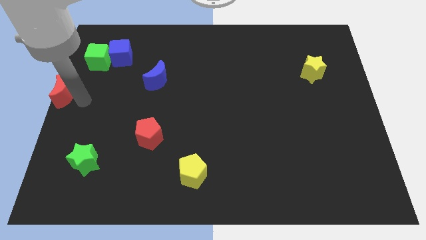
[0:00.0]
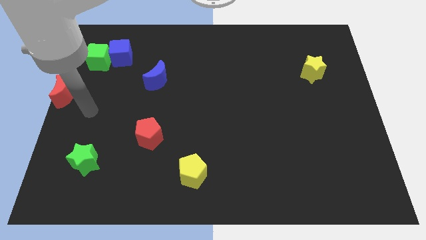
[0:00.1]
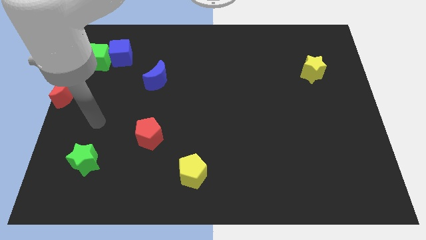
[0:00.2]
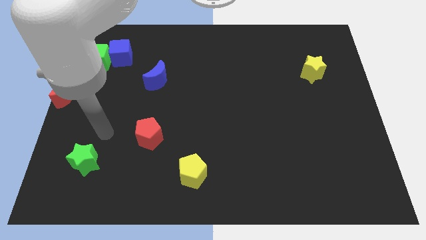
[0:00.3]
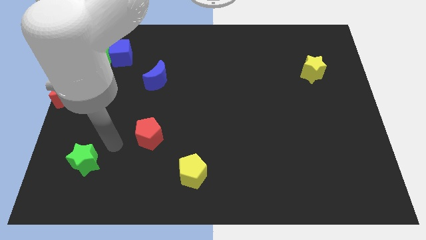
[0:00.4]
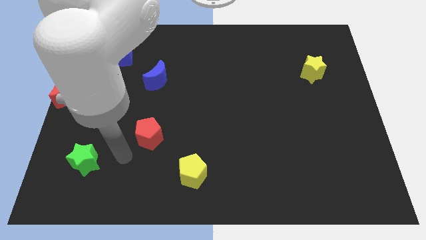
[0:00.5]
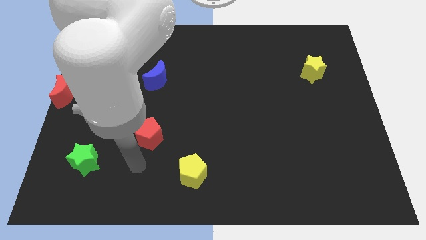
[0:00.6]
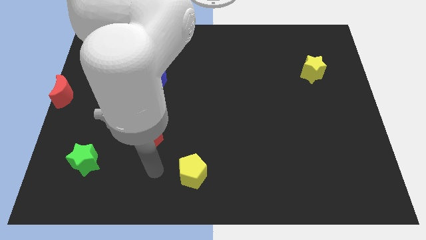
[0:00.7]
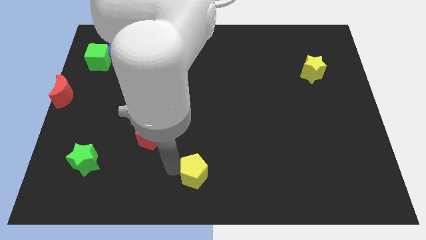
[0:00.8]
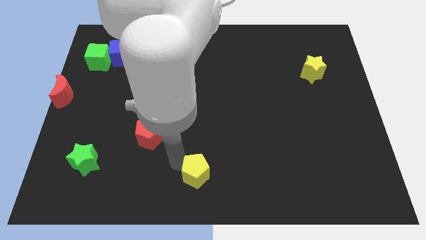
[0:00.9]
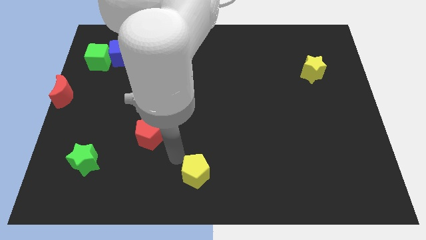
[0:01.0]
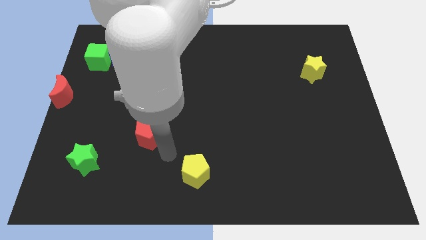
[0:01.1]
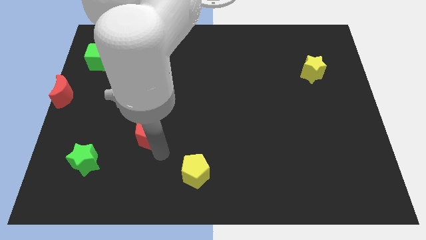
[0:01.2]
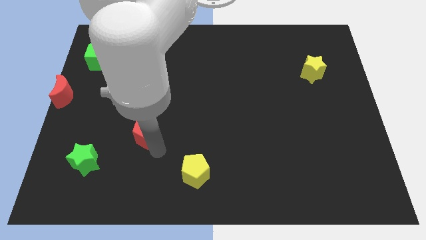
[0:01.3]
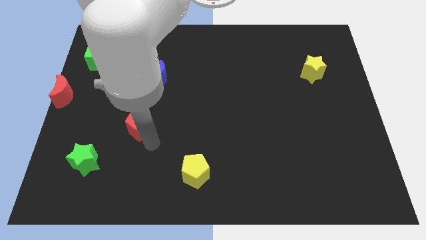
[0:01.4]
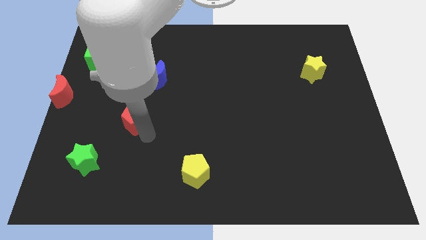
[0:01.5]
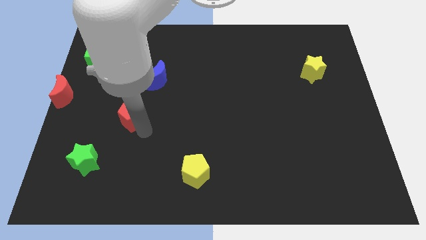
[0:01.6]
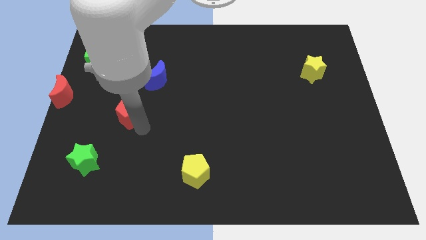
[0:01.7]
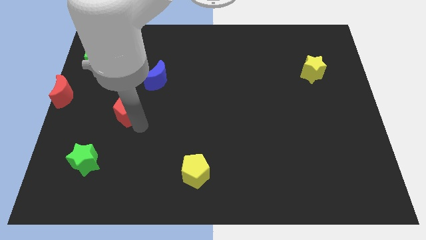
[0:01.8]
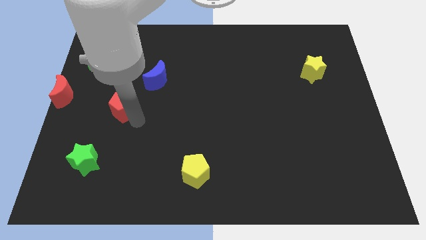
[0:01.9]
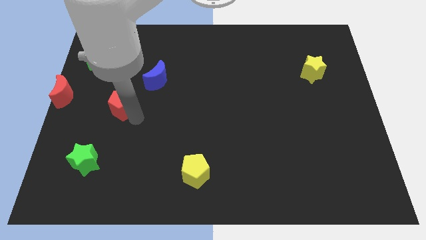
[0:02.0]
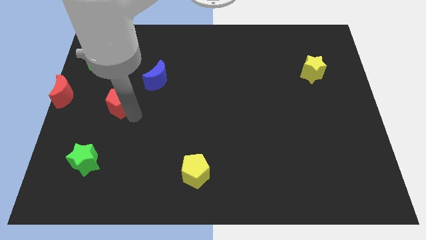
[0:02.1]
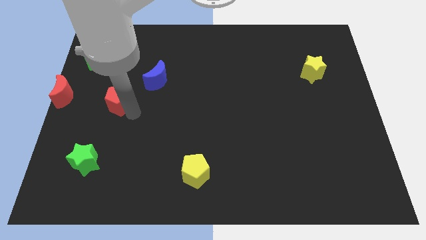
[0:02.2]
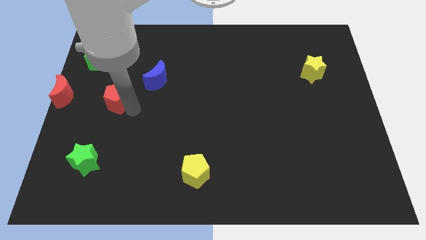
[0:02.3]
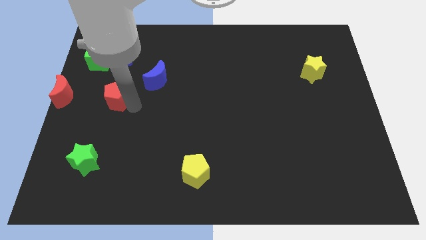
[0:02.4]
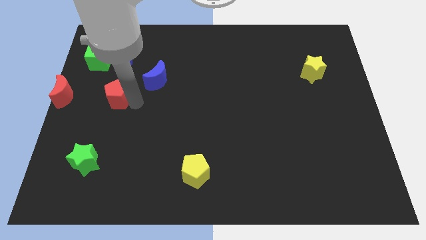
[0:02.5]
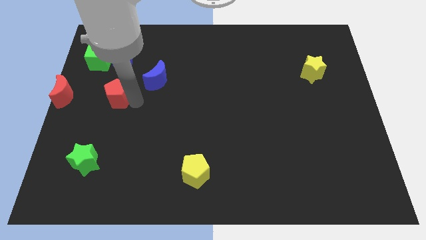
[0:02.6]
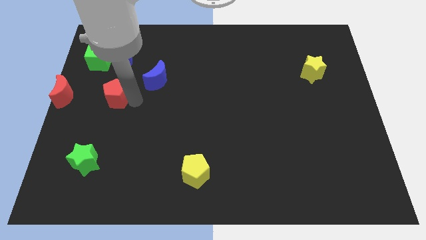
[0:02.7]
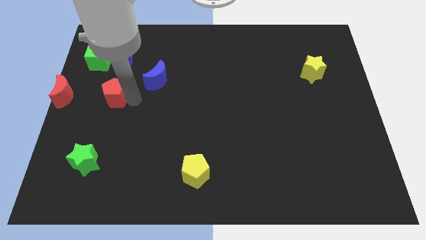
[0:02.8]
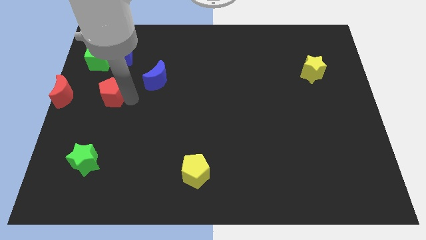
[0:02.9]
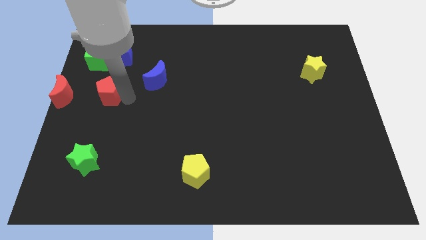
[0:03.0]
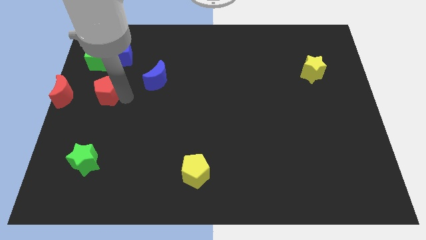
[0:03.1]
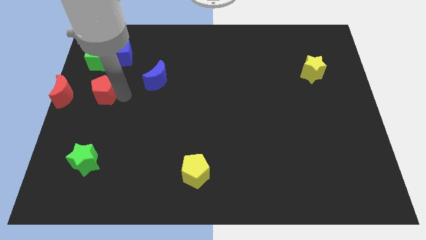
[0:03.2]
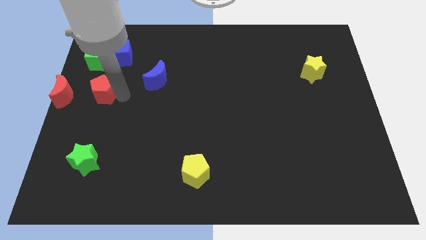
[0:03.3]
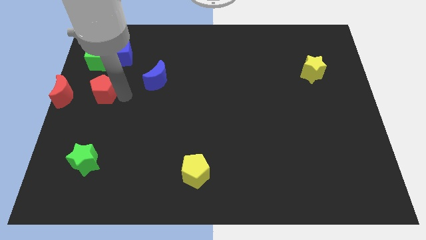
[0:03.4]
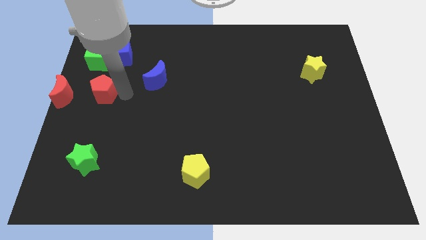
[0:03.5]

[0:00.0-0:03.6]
move away from the red moon

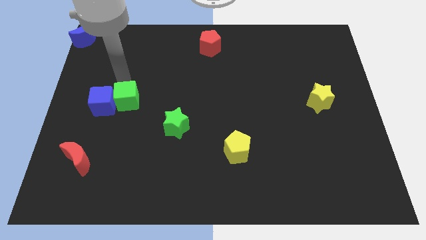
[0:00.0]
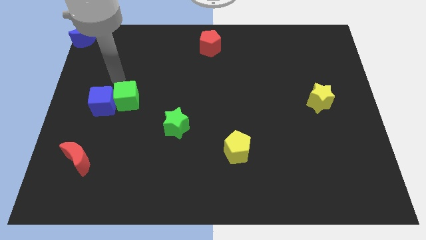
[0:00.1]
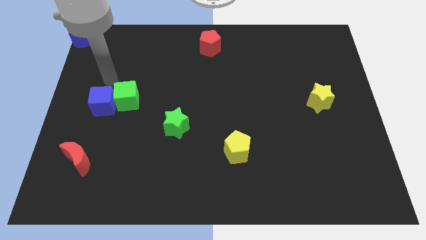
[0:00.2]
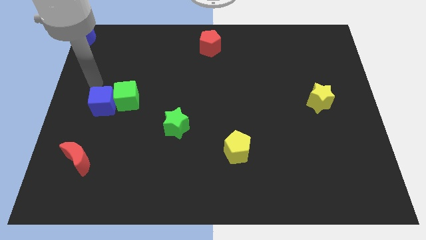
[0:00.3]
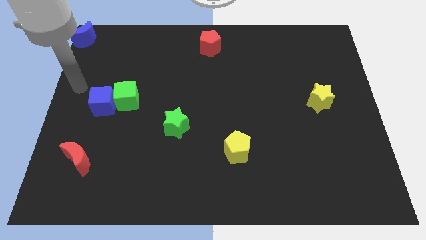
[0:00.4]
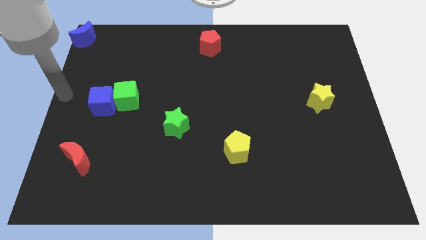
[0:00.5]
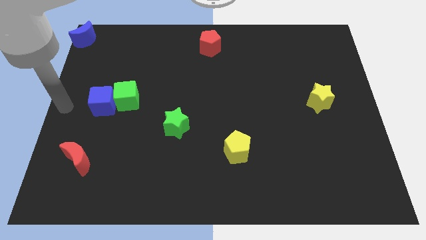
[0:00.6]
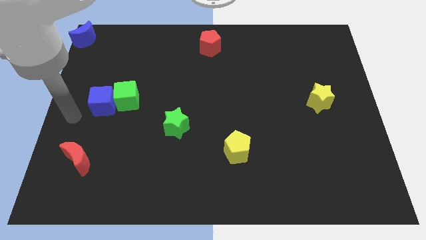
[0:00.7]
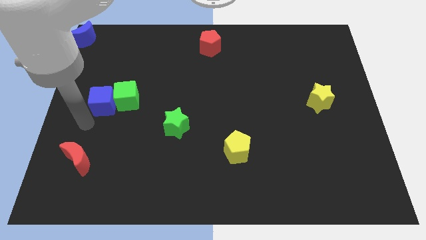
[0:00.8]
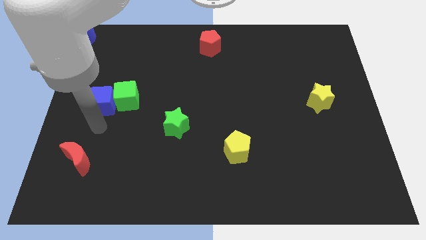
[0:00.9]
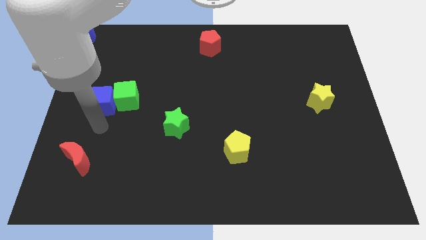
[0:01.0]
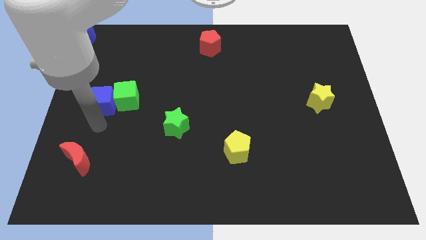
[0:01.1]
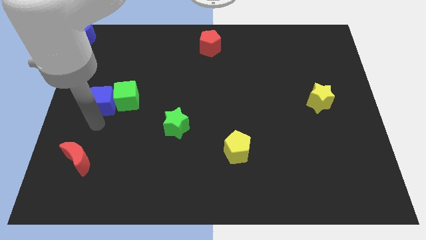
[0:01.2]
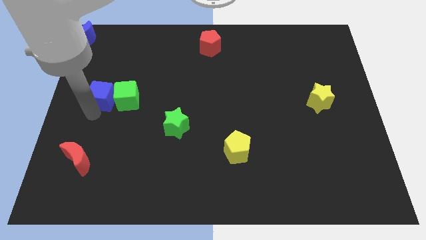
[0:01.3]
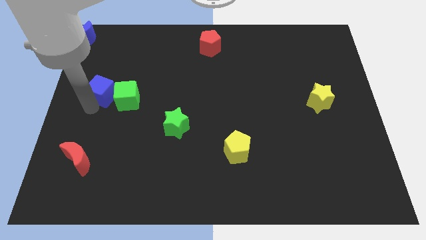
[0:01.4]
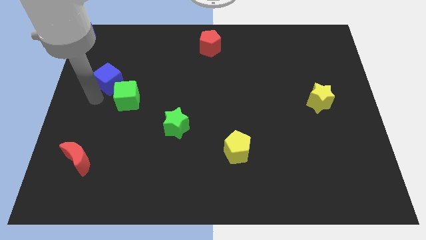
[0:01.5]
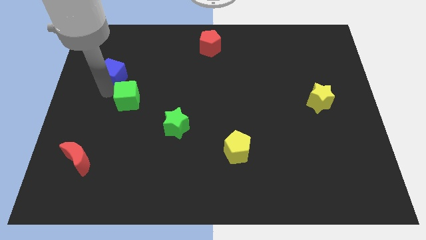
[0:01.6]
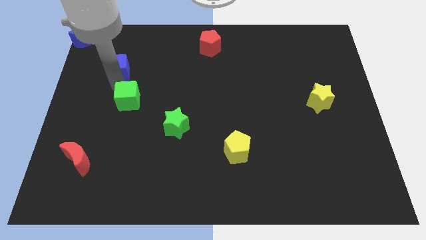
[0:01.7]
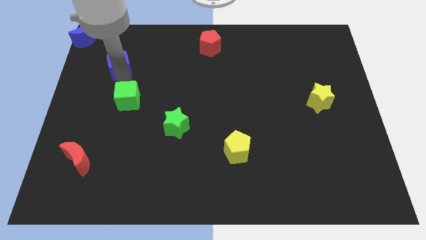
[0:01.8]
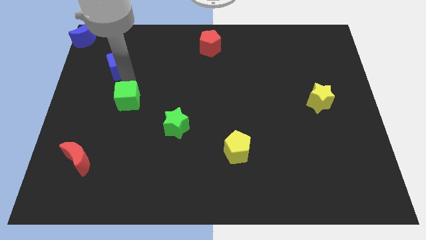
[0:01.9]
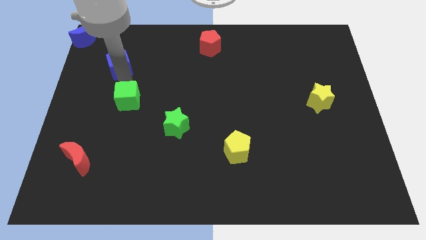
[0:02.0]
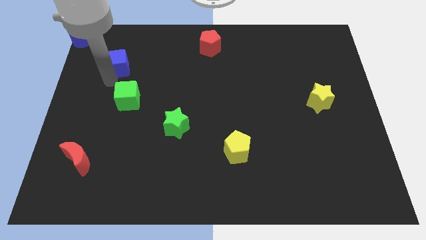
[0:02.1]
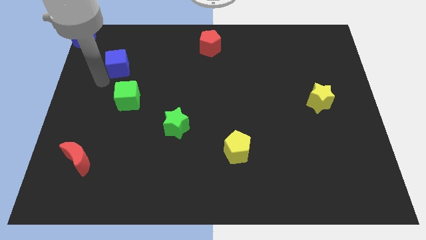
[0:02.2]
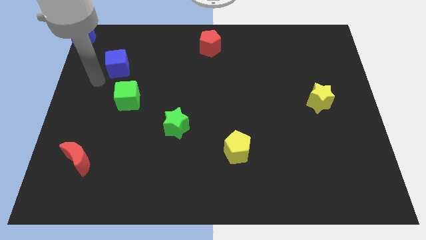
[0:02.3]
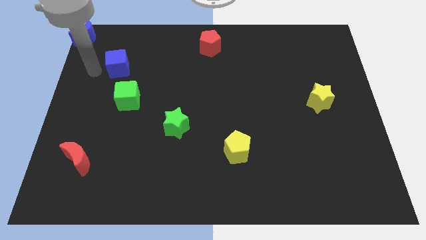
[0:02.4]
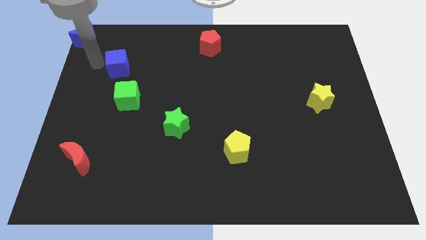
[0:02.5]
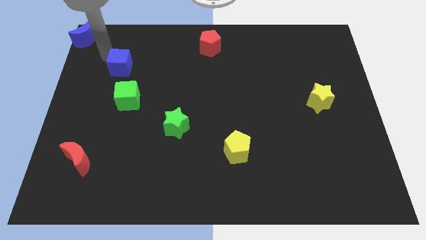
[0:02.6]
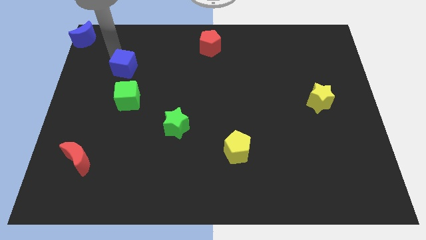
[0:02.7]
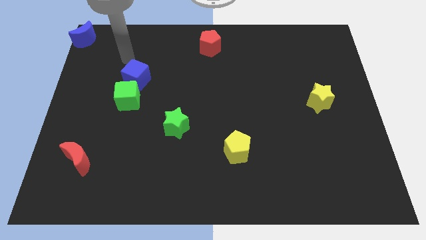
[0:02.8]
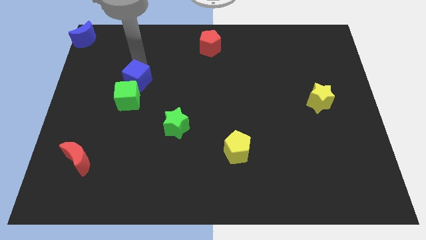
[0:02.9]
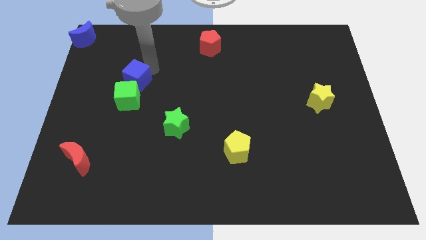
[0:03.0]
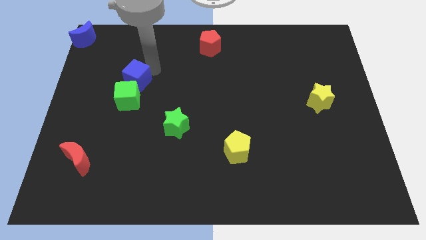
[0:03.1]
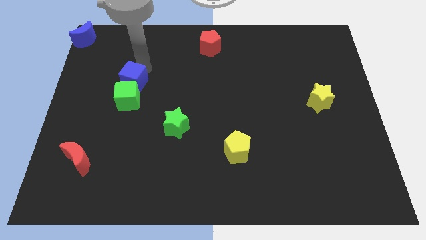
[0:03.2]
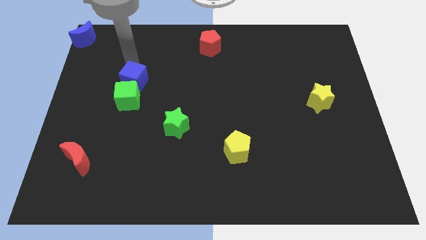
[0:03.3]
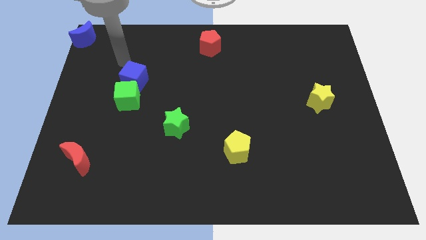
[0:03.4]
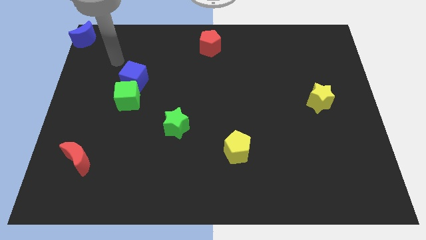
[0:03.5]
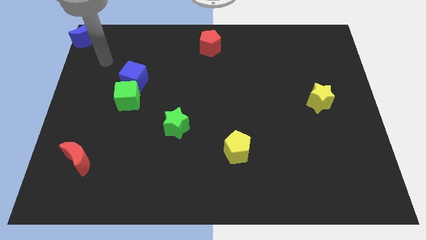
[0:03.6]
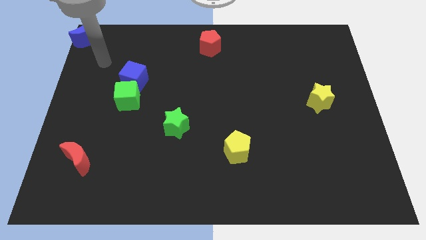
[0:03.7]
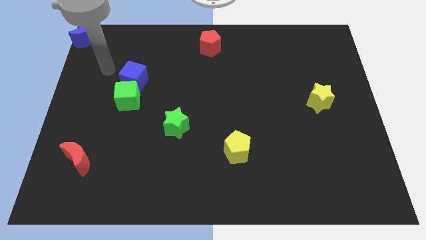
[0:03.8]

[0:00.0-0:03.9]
move the blue cube above the green cube

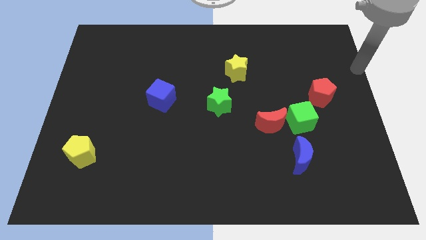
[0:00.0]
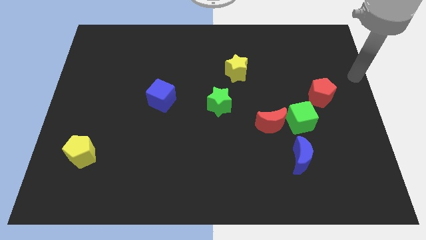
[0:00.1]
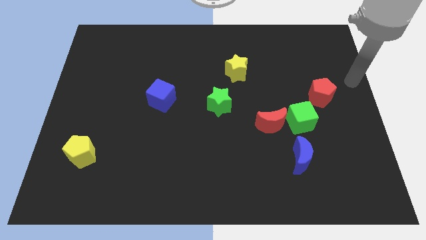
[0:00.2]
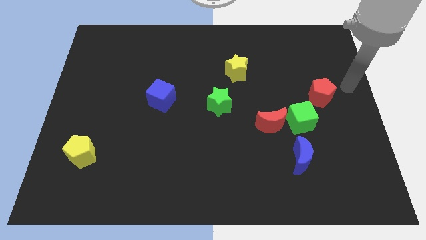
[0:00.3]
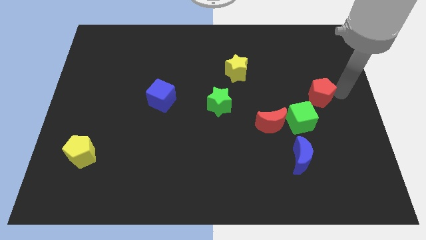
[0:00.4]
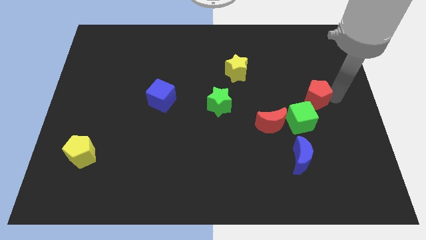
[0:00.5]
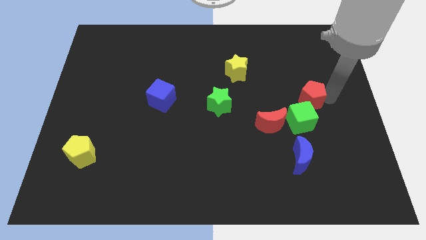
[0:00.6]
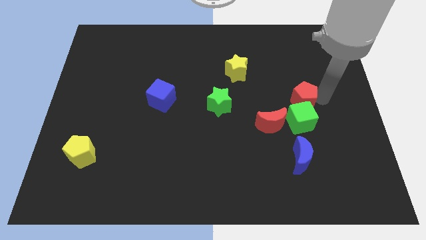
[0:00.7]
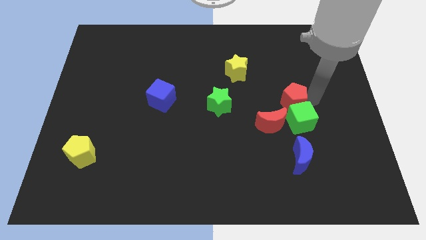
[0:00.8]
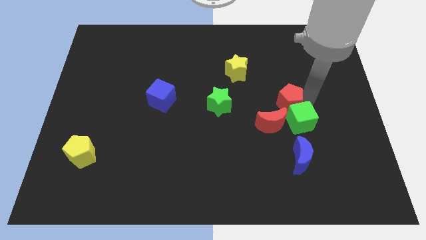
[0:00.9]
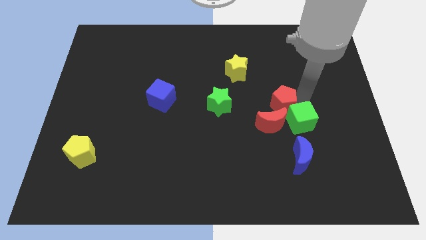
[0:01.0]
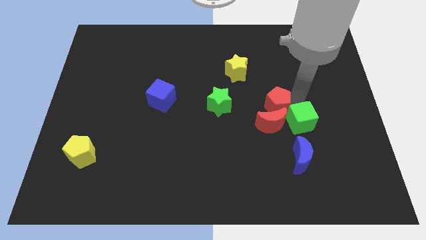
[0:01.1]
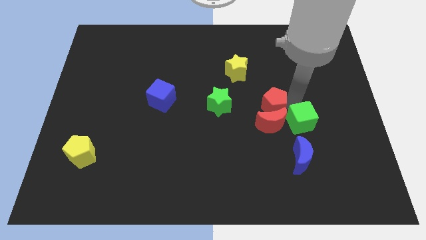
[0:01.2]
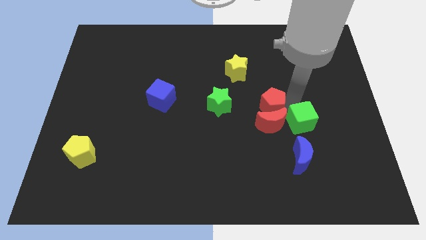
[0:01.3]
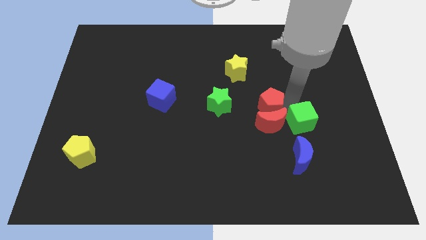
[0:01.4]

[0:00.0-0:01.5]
move the red pentagon to the top of the red moon
